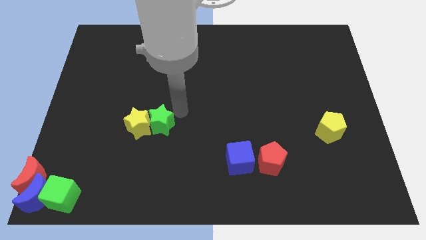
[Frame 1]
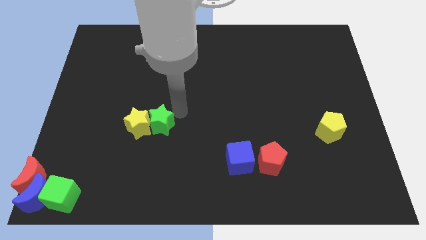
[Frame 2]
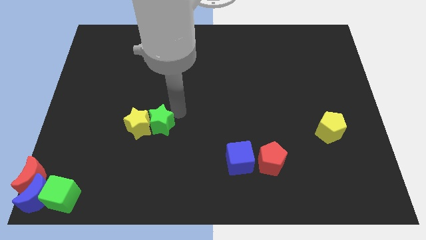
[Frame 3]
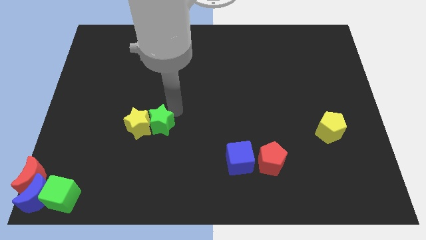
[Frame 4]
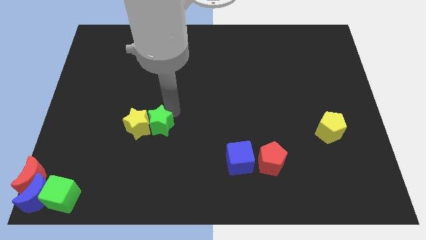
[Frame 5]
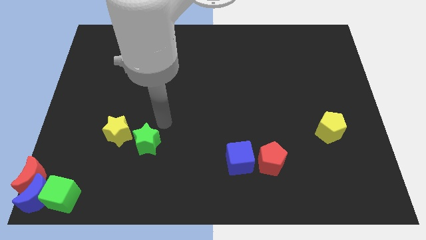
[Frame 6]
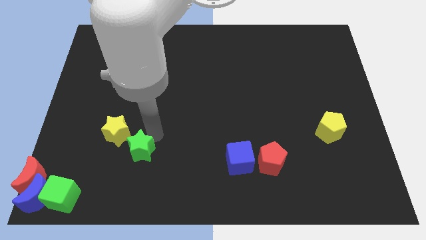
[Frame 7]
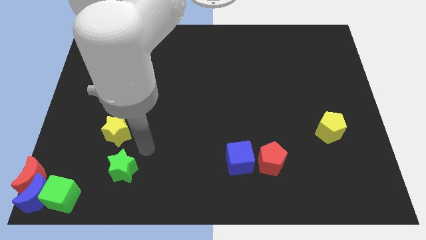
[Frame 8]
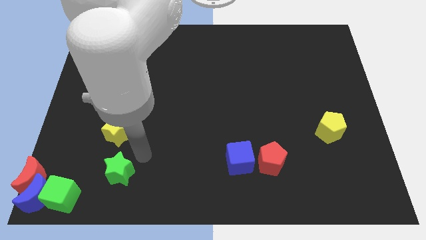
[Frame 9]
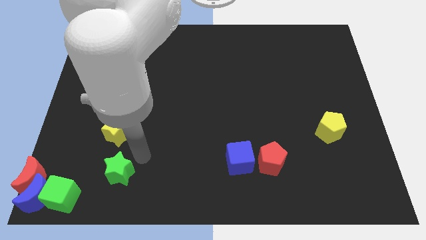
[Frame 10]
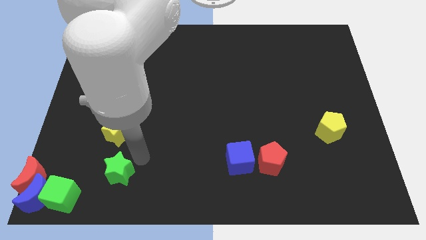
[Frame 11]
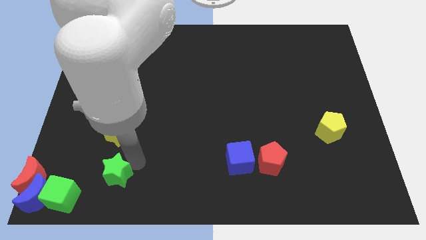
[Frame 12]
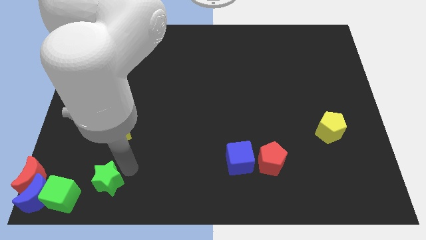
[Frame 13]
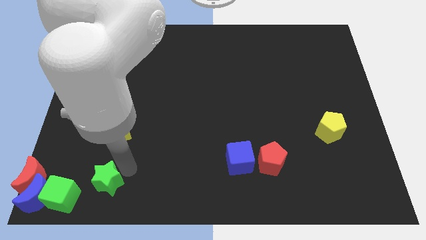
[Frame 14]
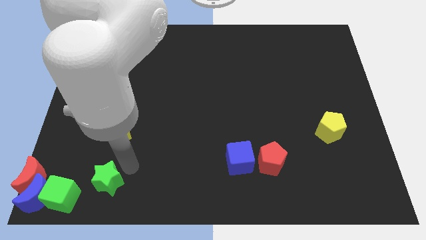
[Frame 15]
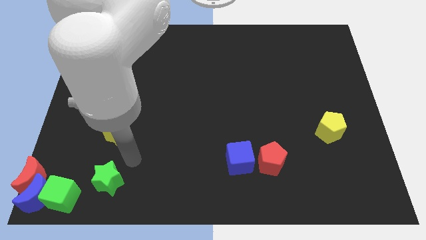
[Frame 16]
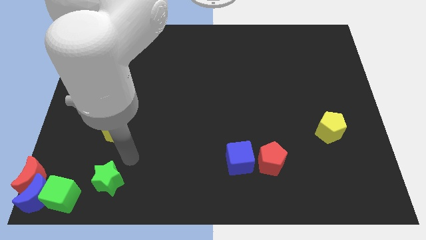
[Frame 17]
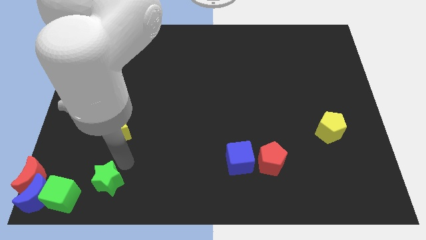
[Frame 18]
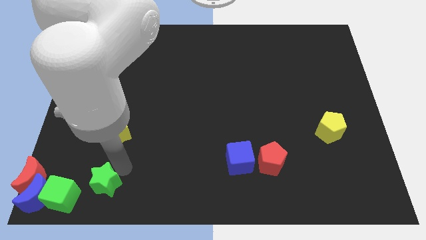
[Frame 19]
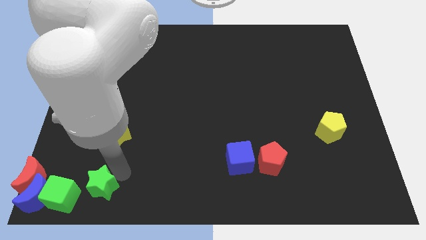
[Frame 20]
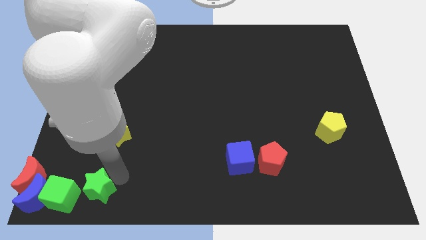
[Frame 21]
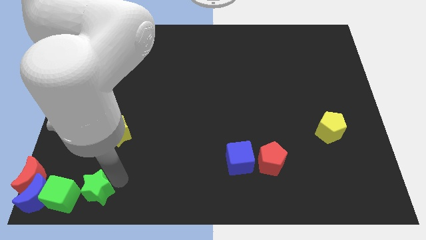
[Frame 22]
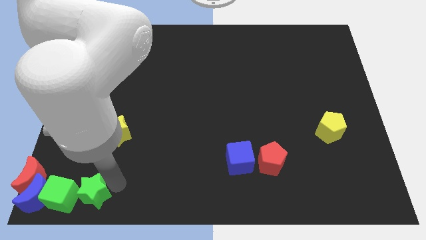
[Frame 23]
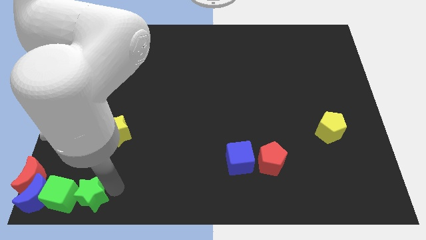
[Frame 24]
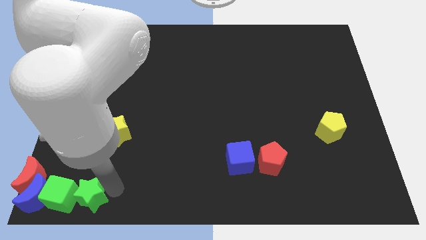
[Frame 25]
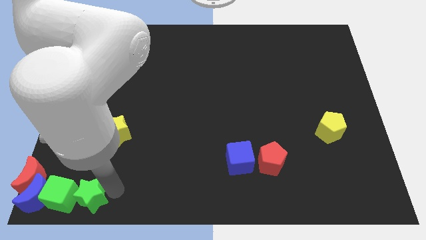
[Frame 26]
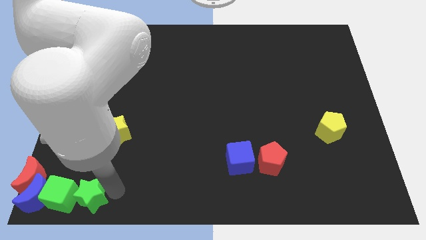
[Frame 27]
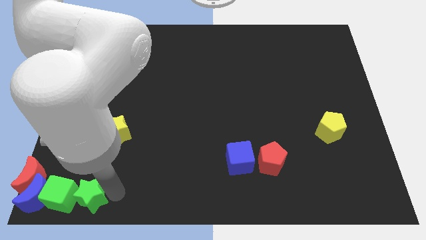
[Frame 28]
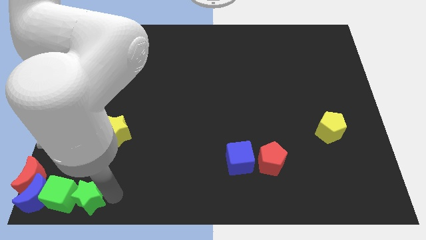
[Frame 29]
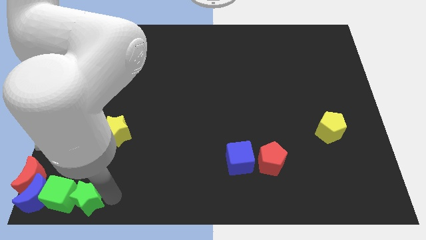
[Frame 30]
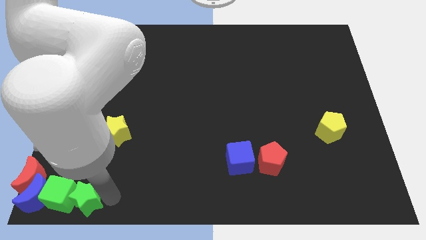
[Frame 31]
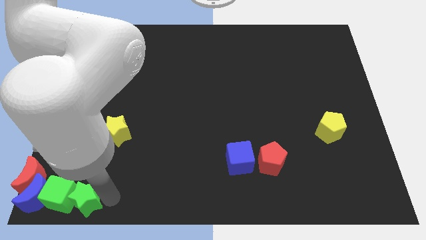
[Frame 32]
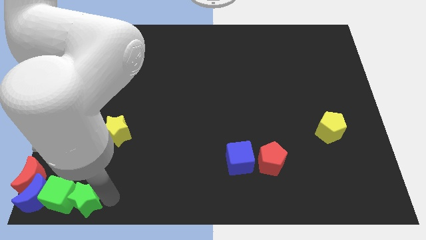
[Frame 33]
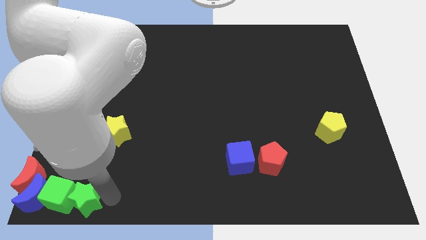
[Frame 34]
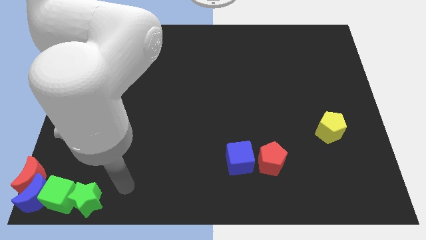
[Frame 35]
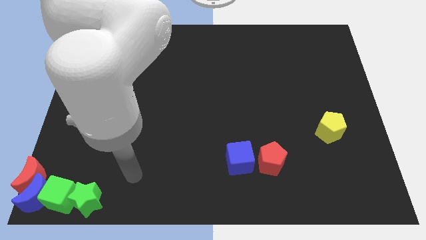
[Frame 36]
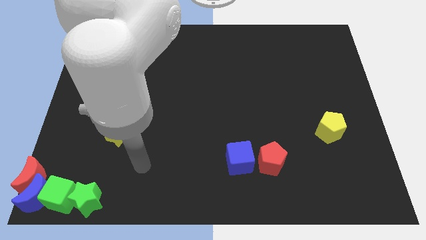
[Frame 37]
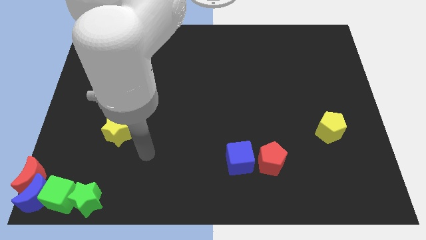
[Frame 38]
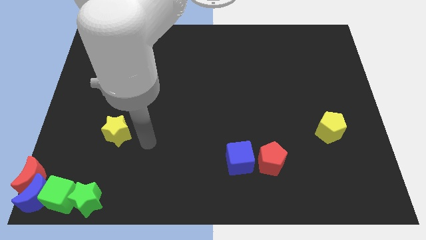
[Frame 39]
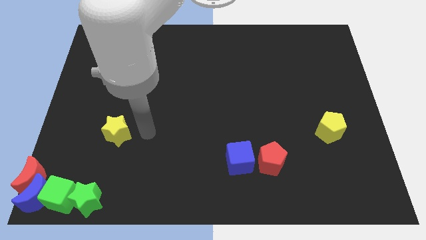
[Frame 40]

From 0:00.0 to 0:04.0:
place the green star right to the green cube

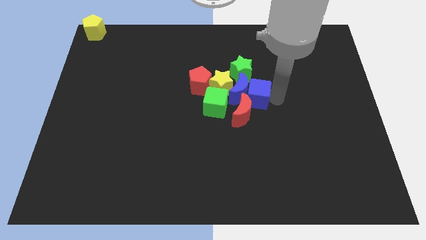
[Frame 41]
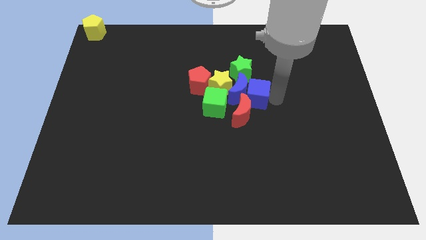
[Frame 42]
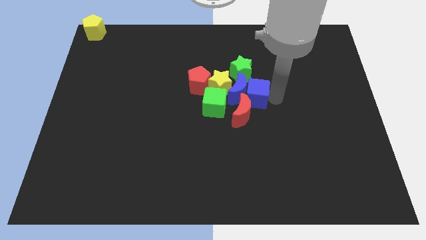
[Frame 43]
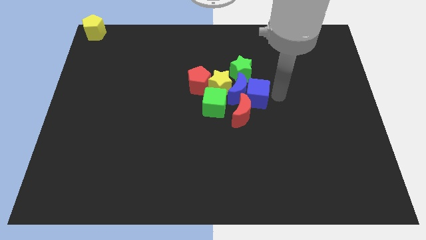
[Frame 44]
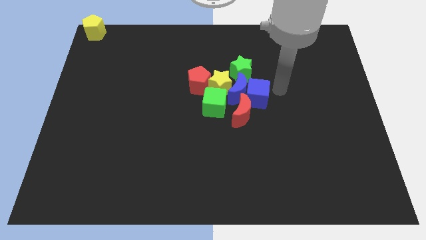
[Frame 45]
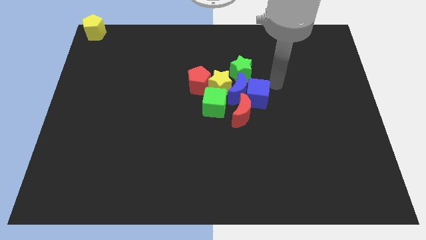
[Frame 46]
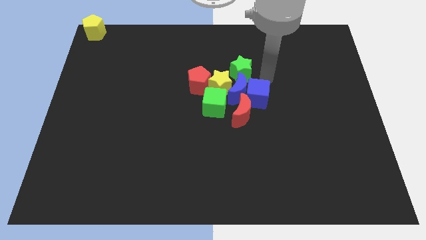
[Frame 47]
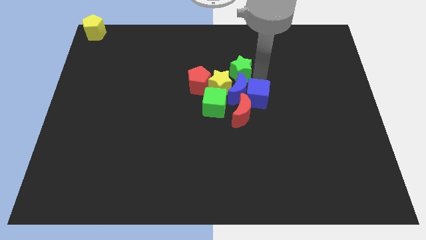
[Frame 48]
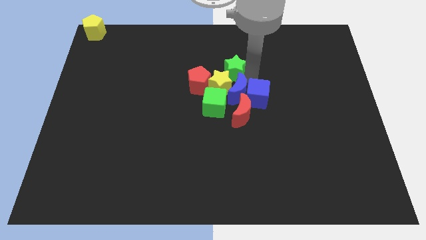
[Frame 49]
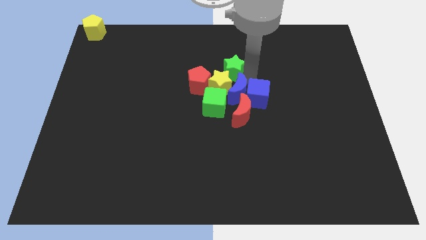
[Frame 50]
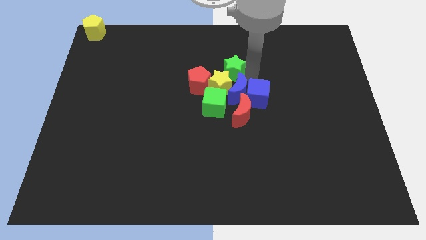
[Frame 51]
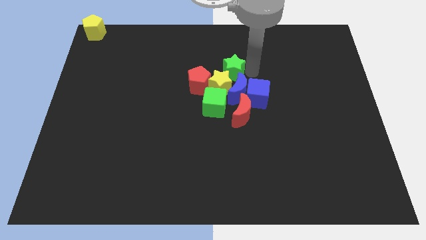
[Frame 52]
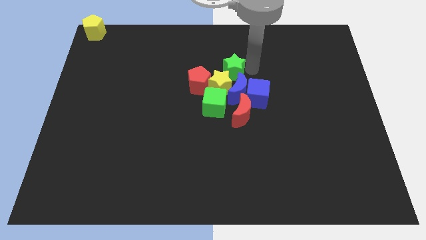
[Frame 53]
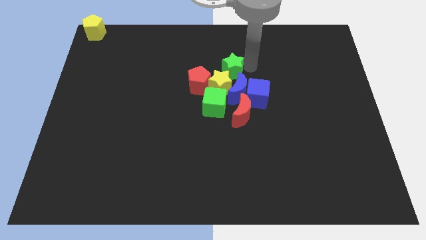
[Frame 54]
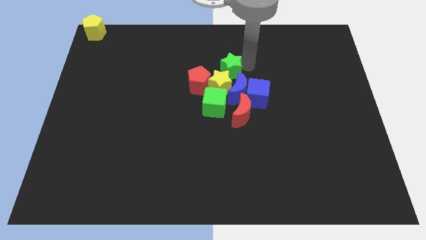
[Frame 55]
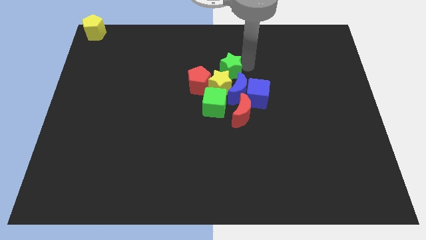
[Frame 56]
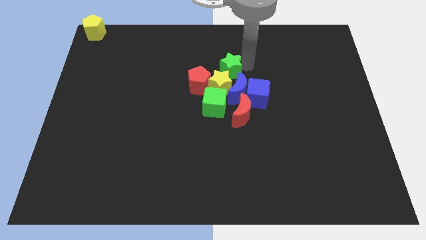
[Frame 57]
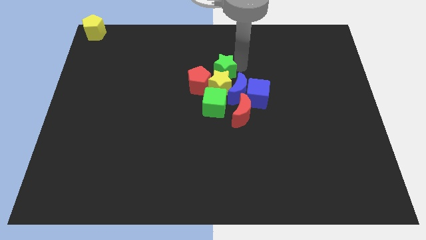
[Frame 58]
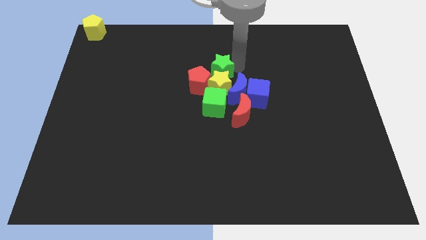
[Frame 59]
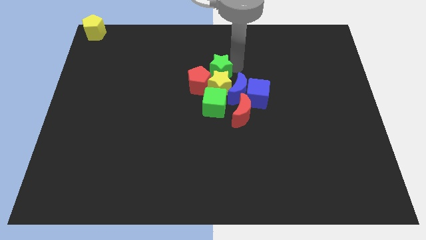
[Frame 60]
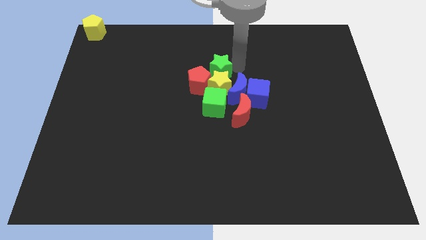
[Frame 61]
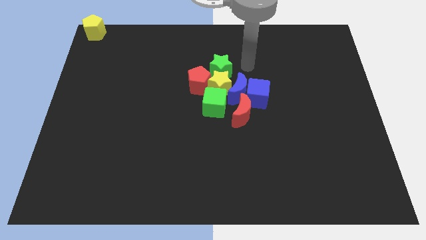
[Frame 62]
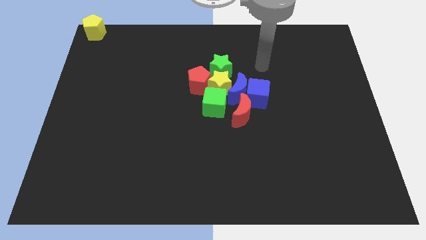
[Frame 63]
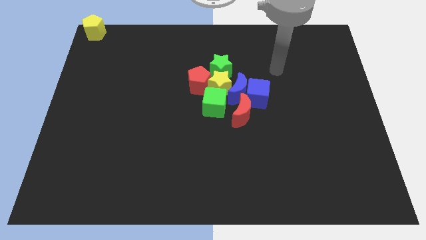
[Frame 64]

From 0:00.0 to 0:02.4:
move the green star above the yellow star

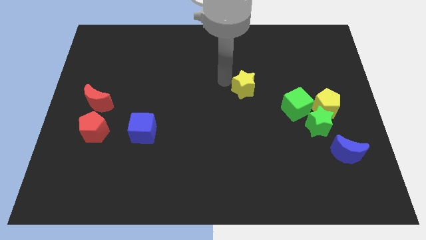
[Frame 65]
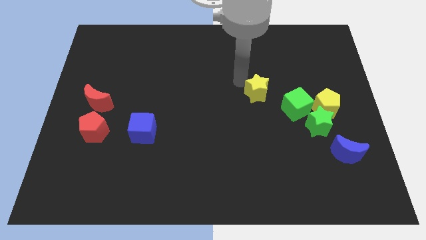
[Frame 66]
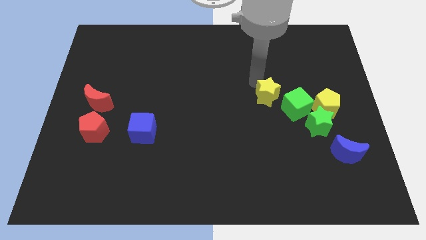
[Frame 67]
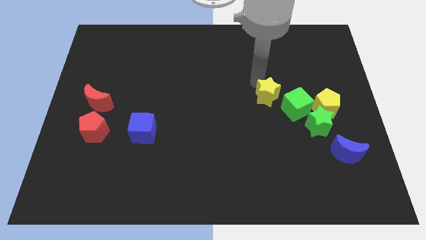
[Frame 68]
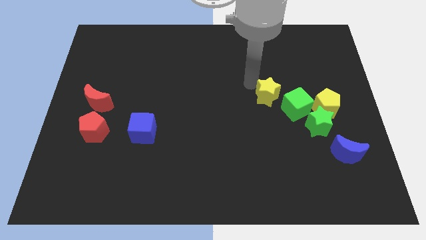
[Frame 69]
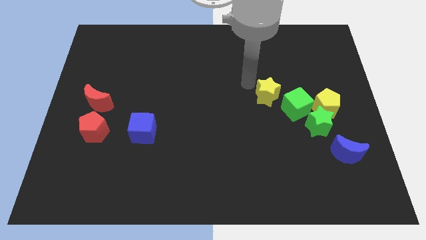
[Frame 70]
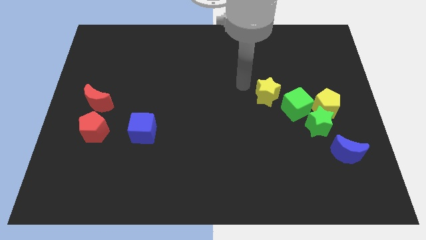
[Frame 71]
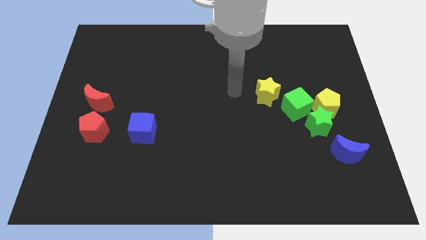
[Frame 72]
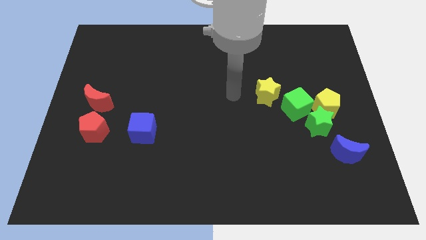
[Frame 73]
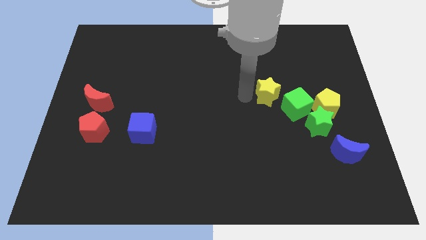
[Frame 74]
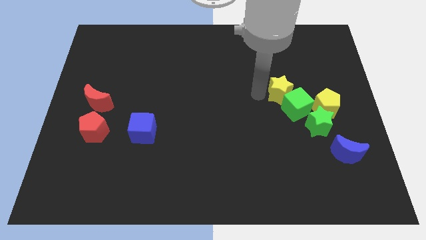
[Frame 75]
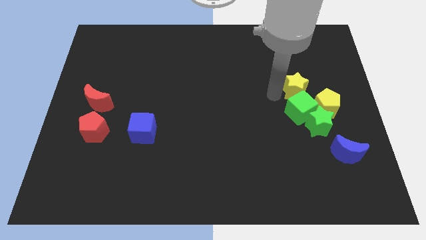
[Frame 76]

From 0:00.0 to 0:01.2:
push the yellow star to the top of the green cube

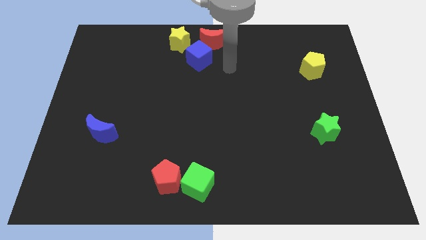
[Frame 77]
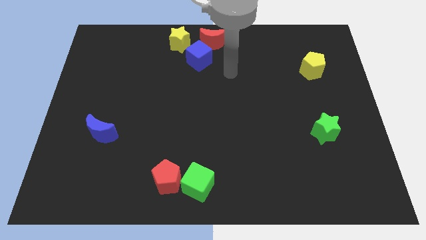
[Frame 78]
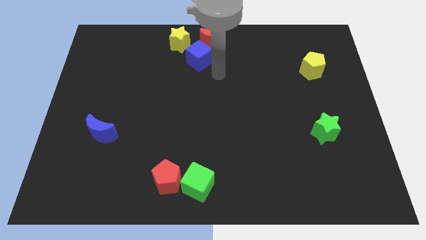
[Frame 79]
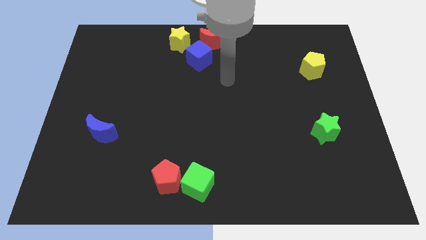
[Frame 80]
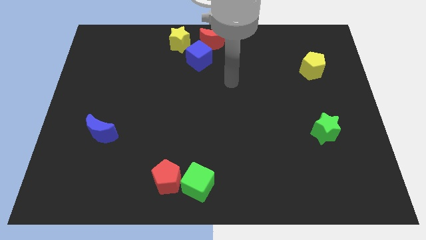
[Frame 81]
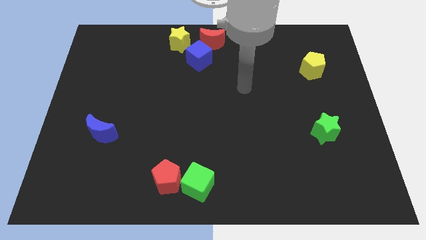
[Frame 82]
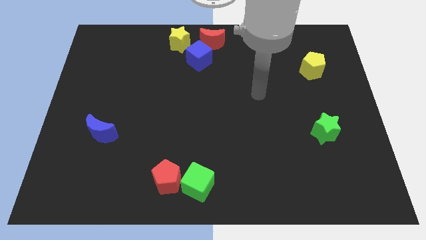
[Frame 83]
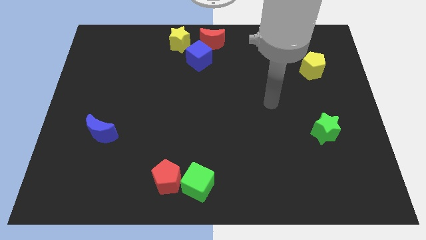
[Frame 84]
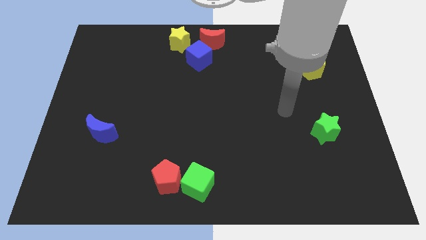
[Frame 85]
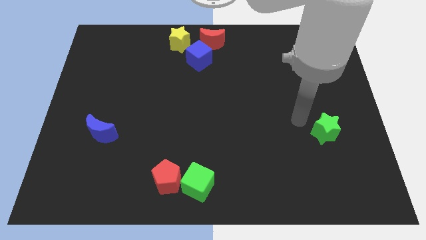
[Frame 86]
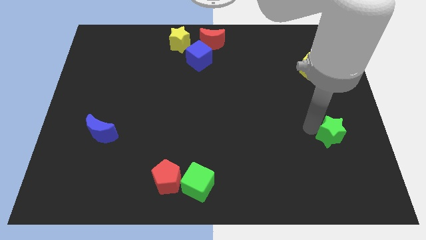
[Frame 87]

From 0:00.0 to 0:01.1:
tap the green star

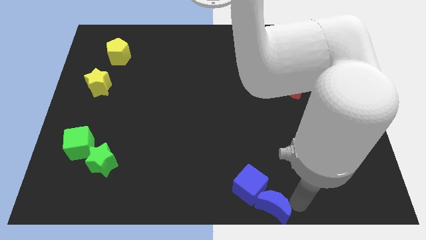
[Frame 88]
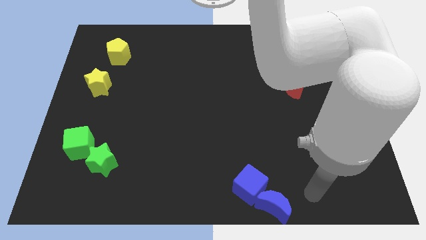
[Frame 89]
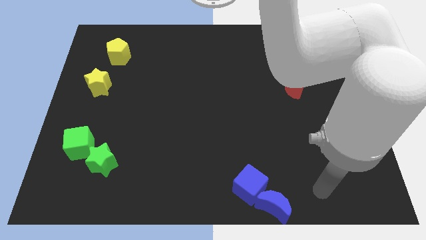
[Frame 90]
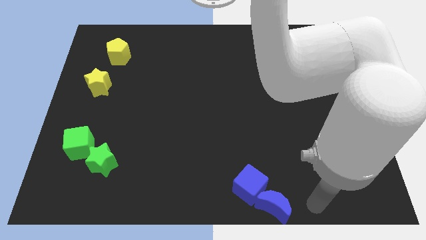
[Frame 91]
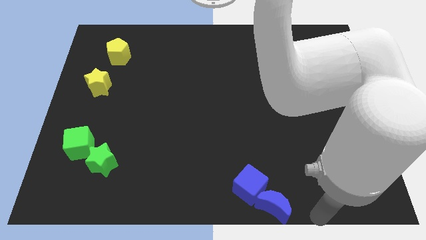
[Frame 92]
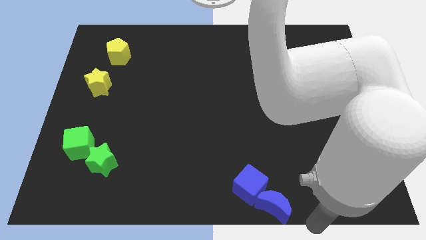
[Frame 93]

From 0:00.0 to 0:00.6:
move your arm to the right of the blue crescent
